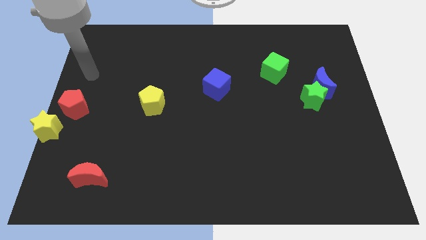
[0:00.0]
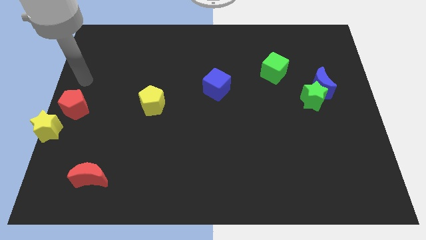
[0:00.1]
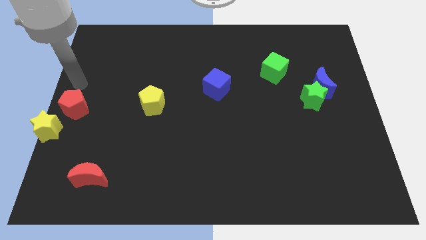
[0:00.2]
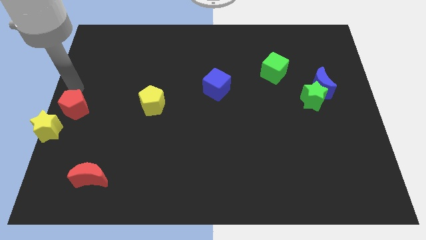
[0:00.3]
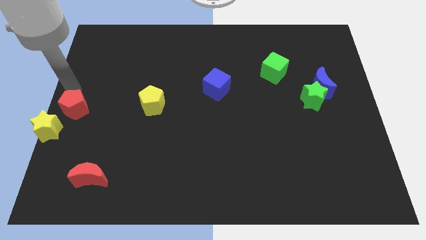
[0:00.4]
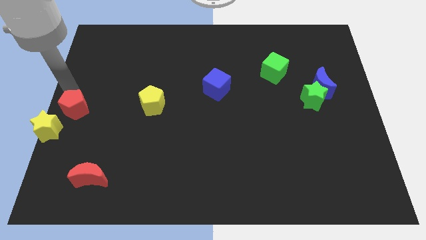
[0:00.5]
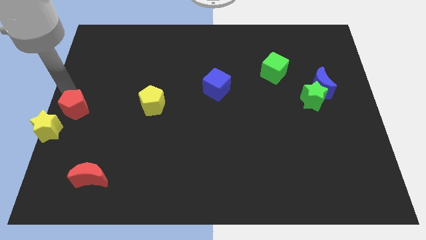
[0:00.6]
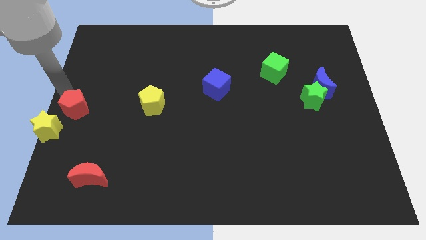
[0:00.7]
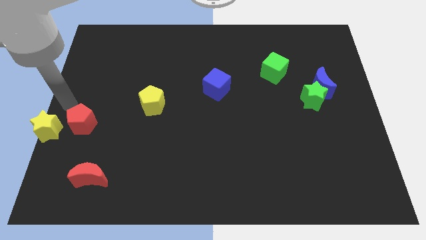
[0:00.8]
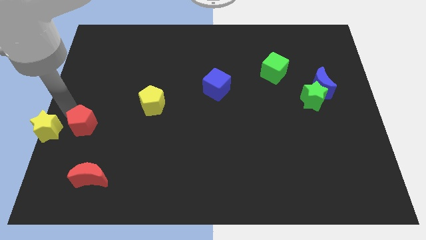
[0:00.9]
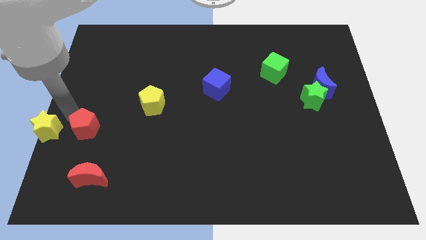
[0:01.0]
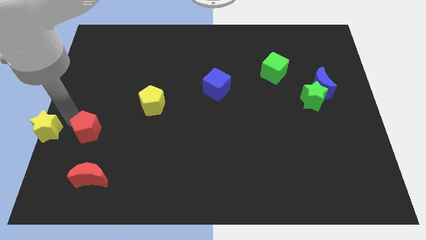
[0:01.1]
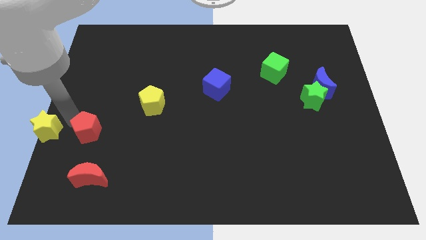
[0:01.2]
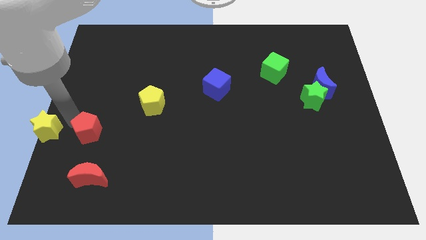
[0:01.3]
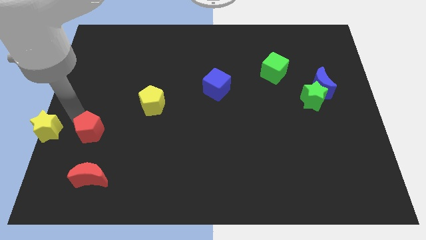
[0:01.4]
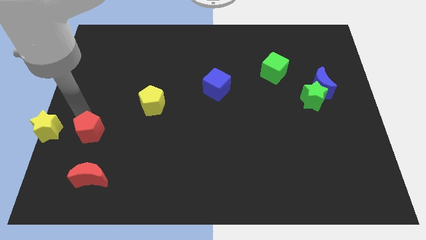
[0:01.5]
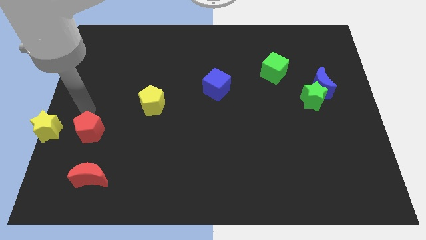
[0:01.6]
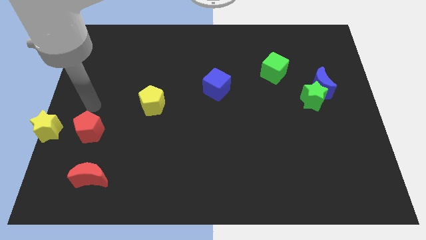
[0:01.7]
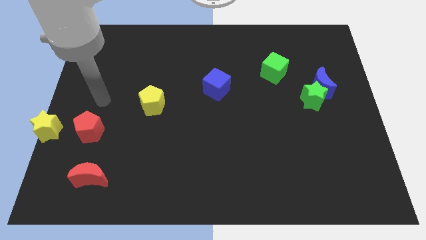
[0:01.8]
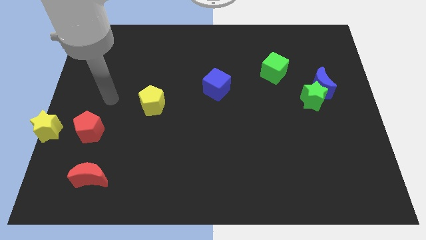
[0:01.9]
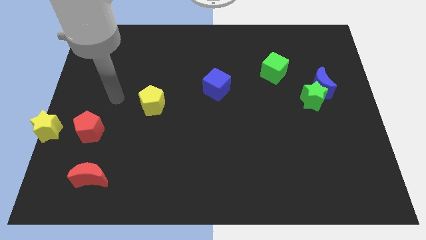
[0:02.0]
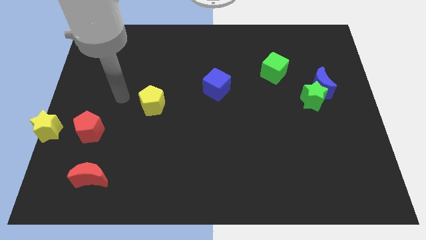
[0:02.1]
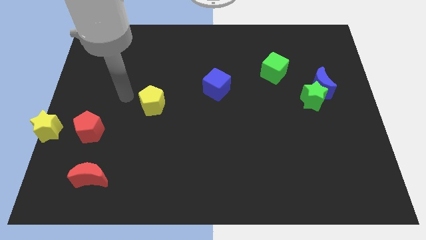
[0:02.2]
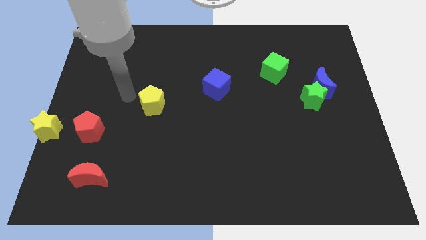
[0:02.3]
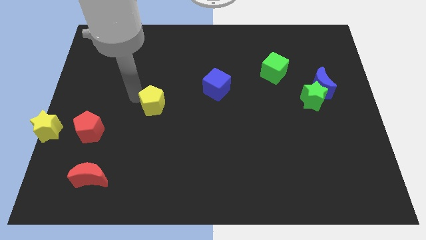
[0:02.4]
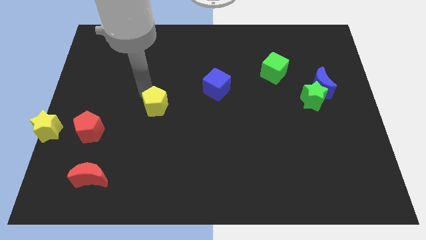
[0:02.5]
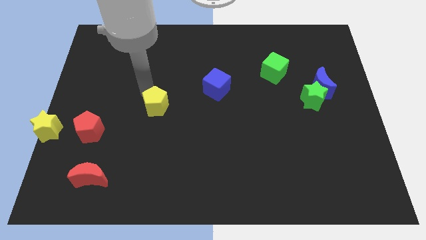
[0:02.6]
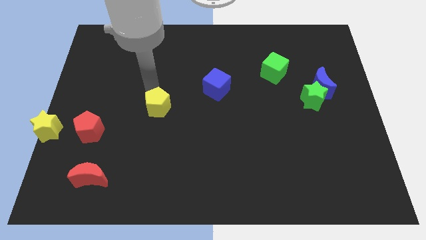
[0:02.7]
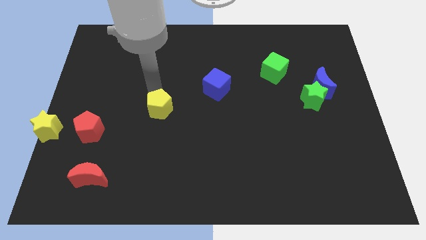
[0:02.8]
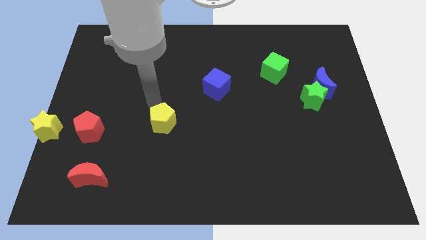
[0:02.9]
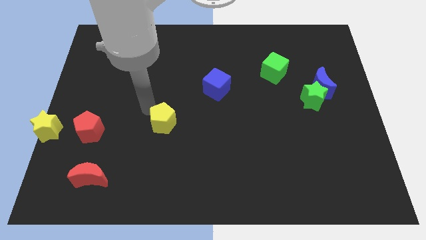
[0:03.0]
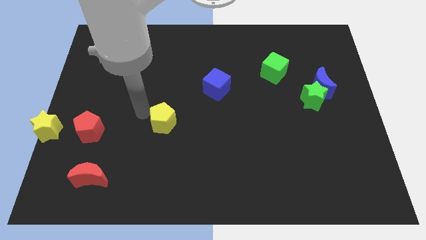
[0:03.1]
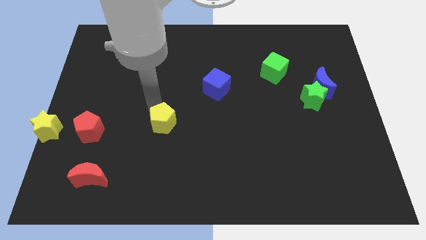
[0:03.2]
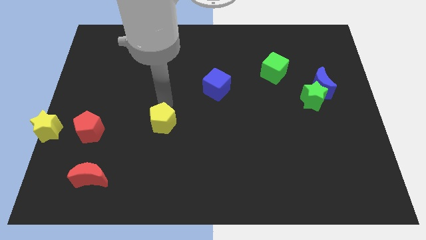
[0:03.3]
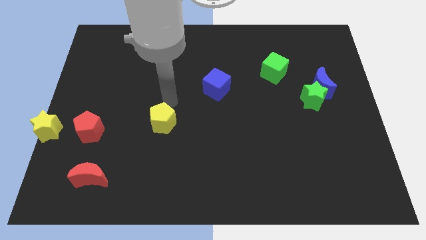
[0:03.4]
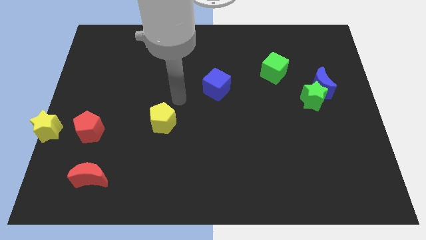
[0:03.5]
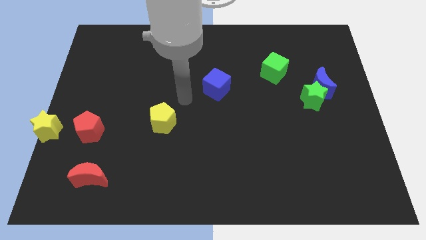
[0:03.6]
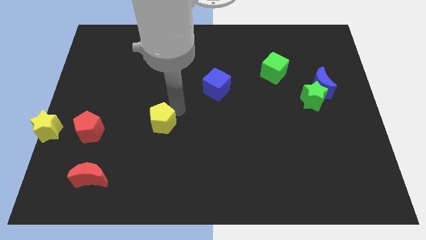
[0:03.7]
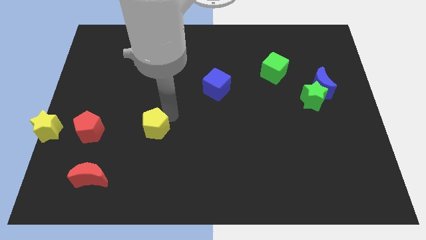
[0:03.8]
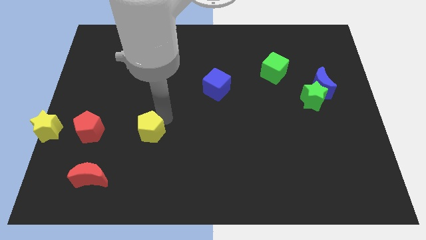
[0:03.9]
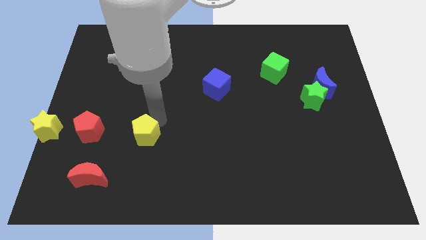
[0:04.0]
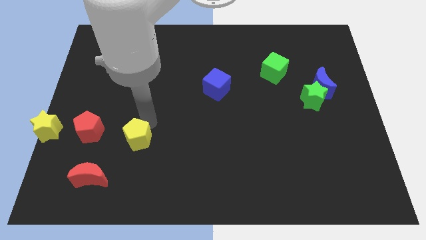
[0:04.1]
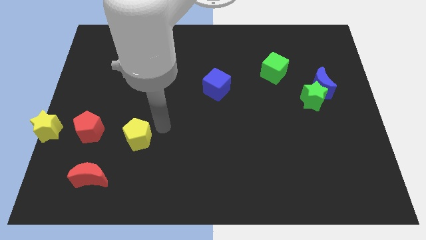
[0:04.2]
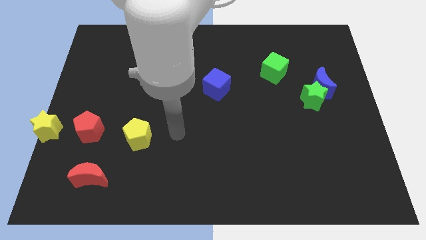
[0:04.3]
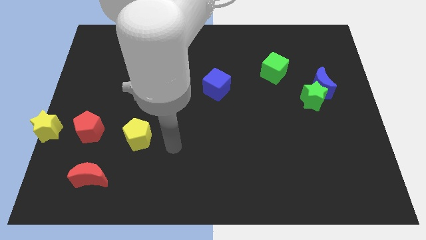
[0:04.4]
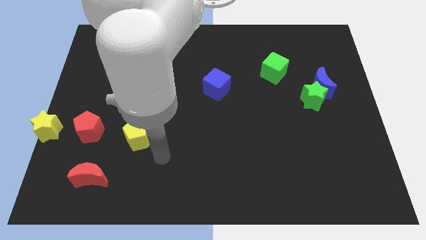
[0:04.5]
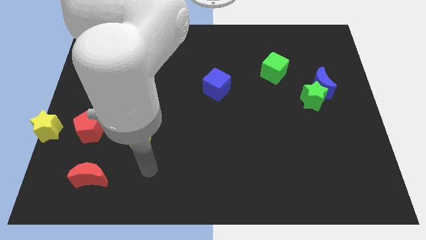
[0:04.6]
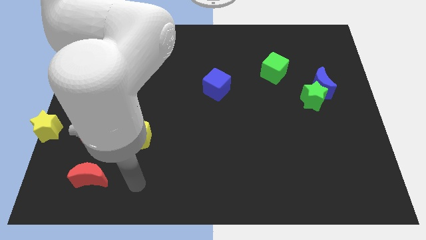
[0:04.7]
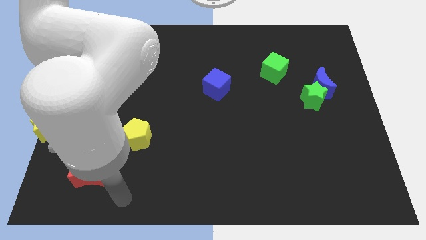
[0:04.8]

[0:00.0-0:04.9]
place the red and yellow pentagons in a line horizontally

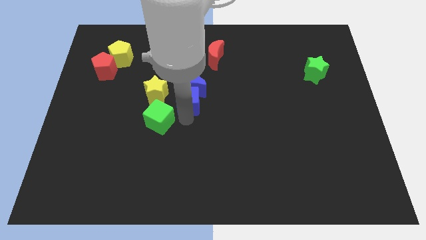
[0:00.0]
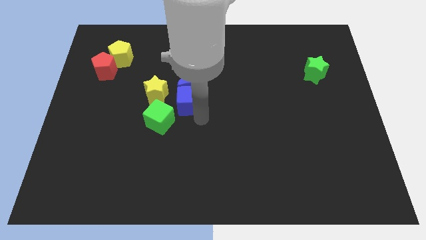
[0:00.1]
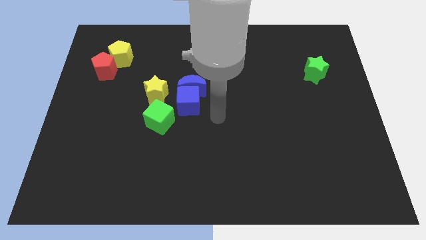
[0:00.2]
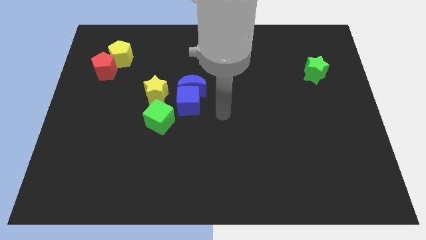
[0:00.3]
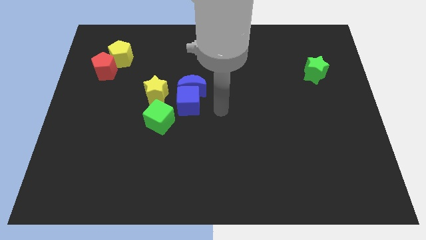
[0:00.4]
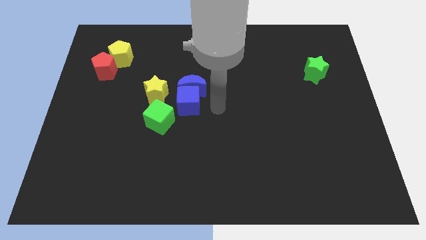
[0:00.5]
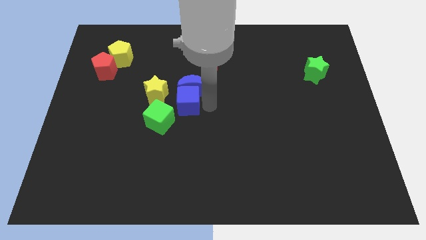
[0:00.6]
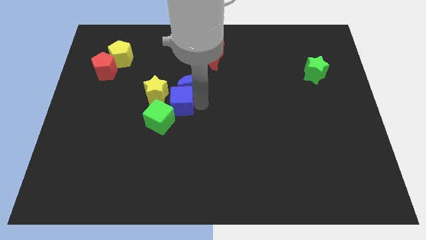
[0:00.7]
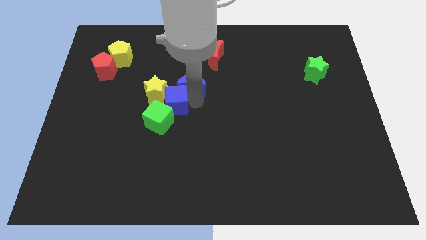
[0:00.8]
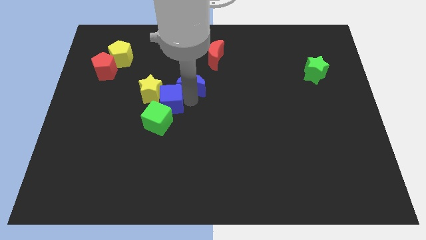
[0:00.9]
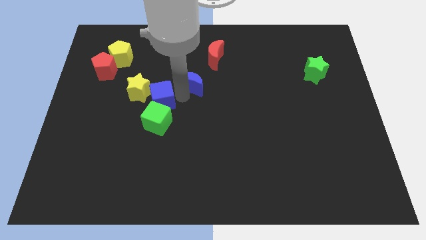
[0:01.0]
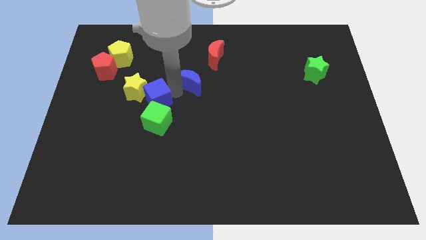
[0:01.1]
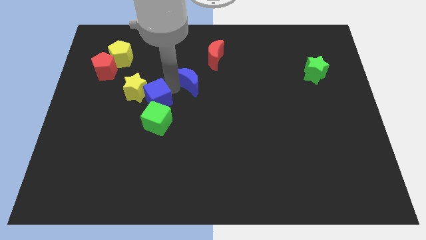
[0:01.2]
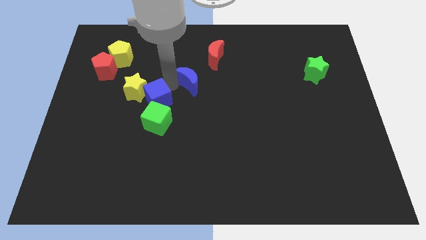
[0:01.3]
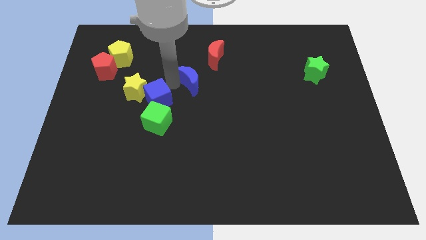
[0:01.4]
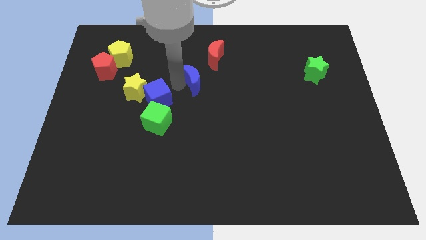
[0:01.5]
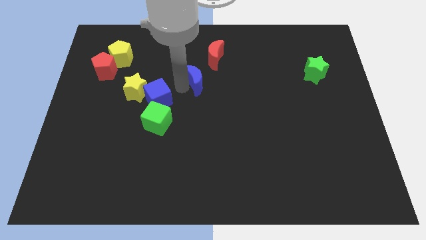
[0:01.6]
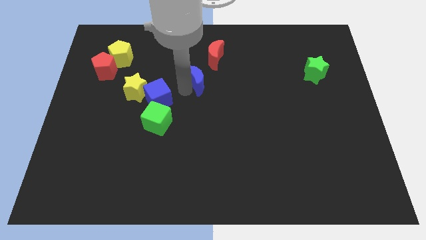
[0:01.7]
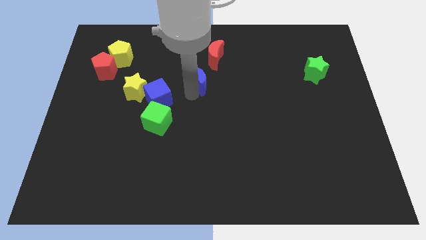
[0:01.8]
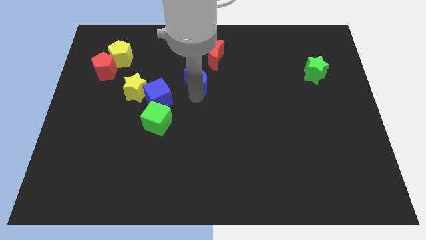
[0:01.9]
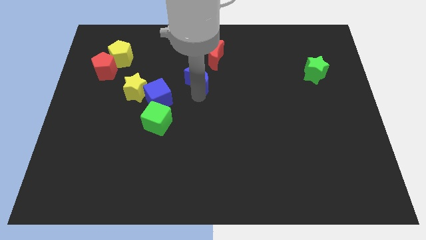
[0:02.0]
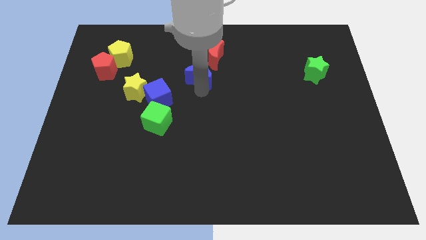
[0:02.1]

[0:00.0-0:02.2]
separate blue cube and blue moon

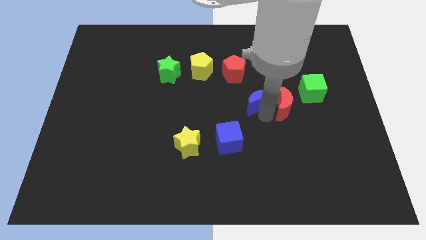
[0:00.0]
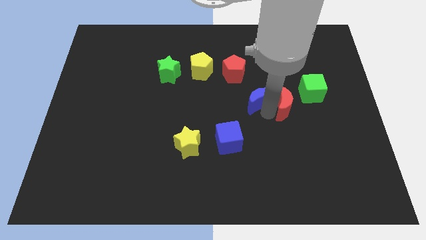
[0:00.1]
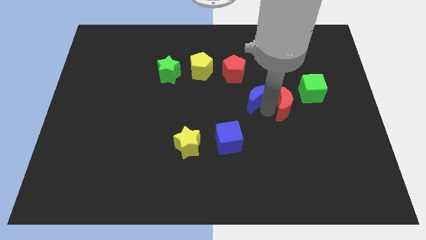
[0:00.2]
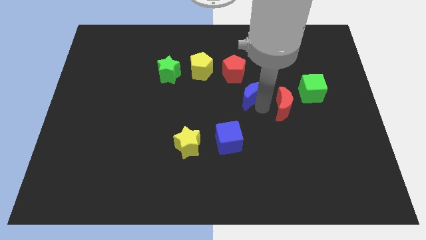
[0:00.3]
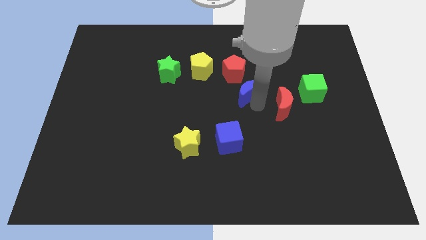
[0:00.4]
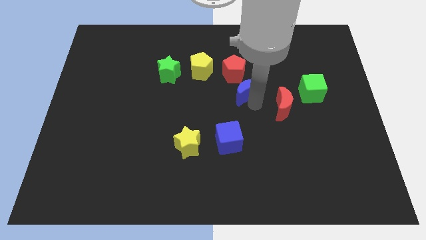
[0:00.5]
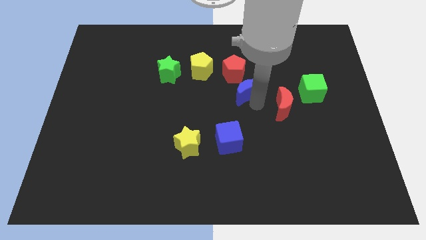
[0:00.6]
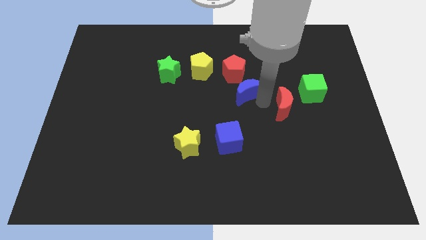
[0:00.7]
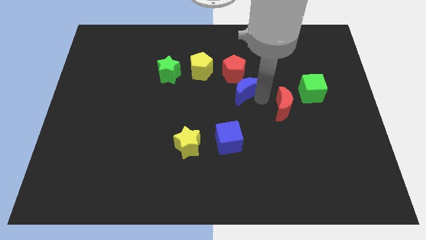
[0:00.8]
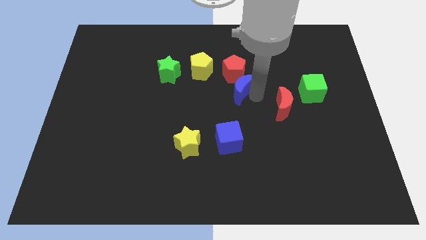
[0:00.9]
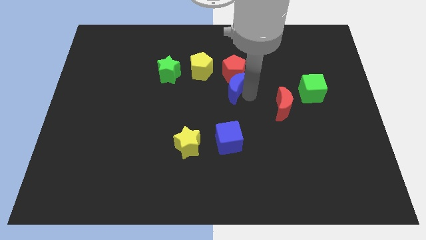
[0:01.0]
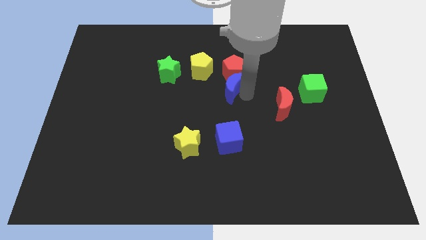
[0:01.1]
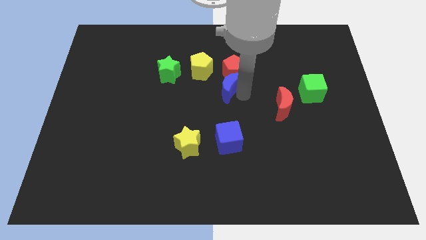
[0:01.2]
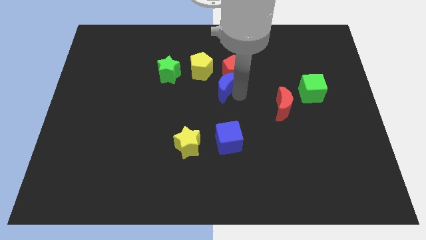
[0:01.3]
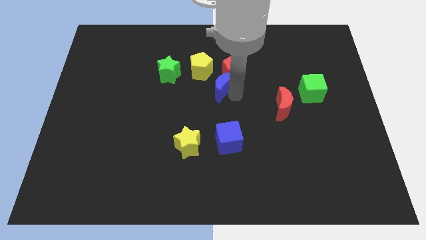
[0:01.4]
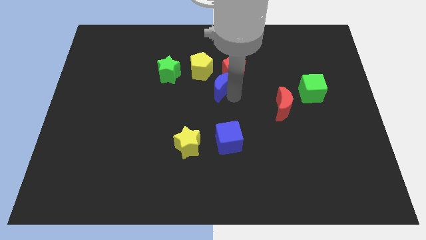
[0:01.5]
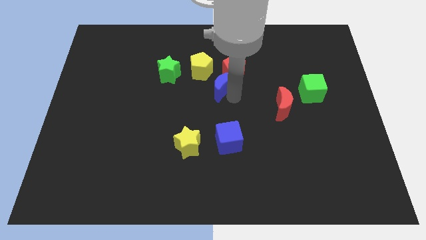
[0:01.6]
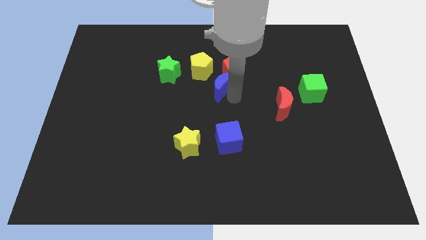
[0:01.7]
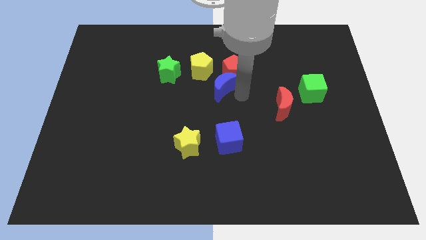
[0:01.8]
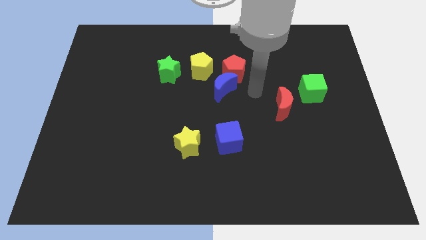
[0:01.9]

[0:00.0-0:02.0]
place the blue crescent below to the red pentagon
